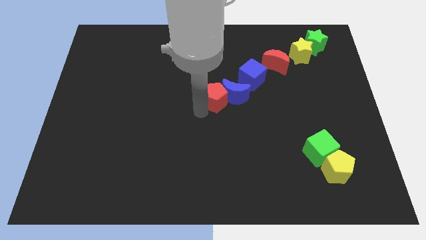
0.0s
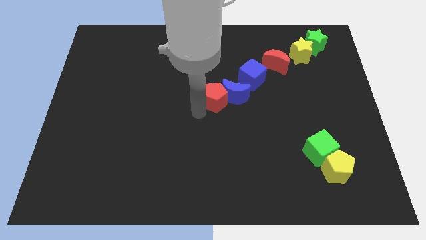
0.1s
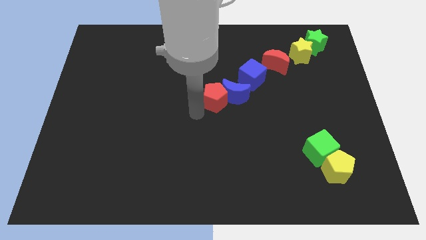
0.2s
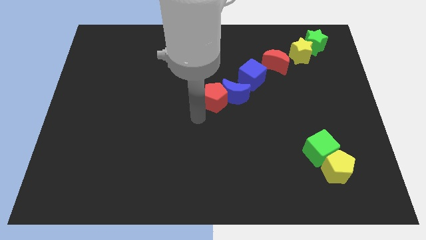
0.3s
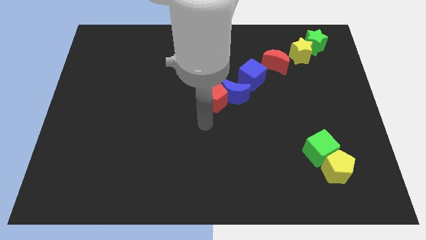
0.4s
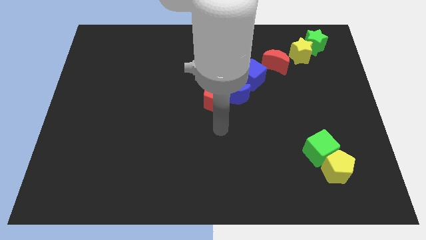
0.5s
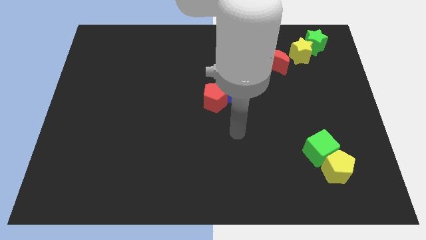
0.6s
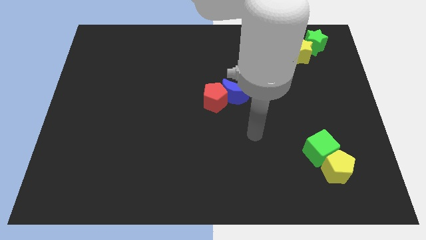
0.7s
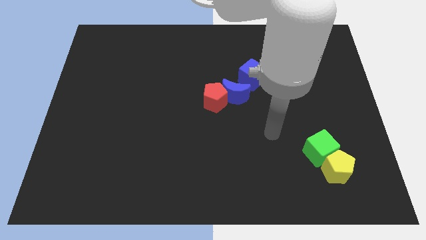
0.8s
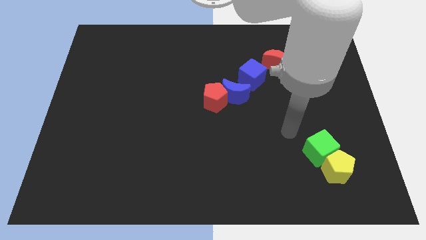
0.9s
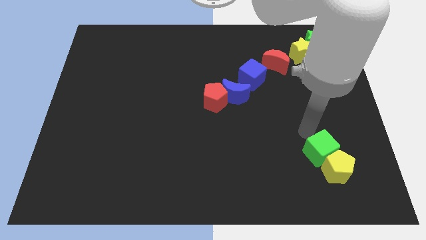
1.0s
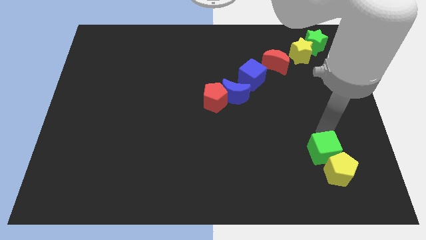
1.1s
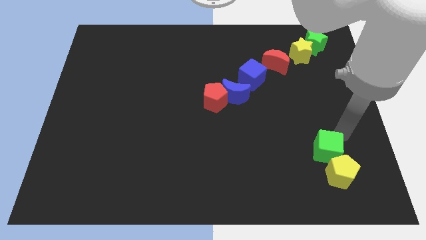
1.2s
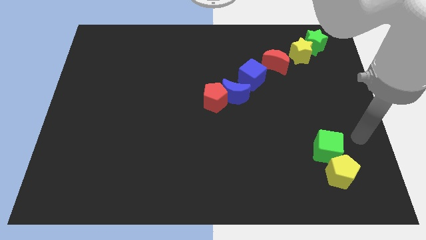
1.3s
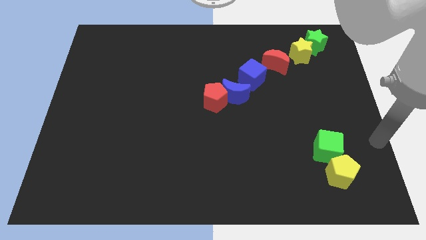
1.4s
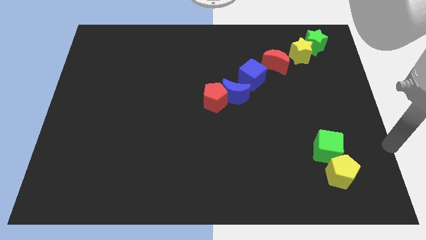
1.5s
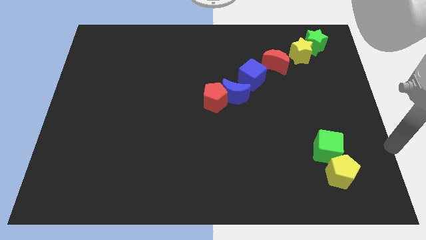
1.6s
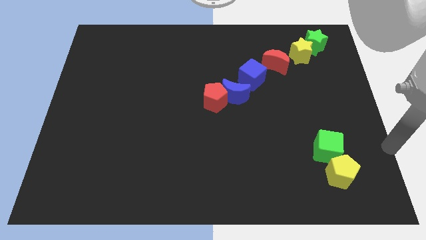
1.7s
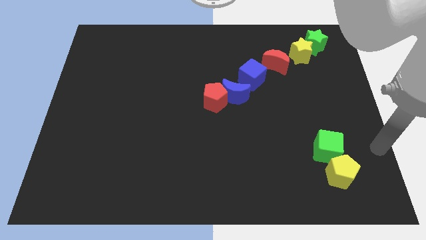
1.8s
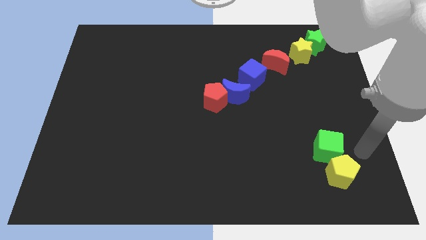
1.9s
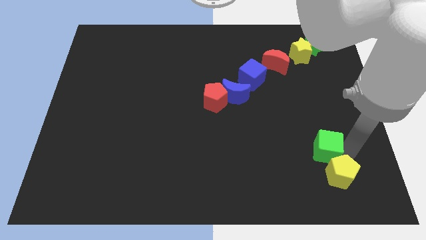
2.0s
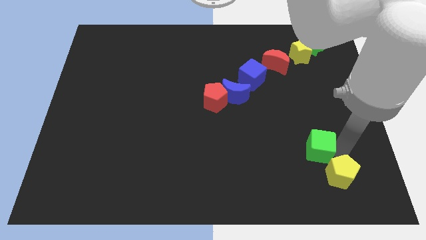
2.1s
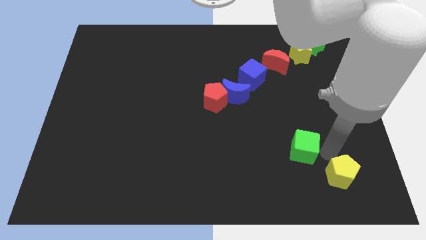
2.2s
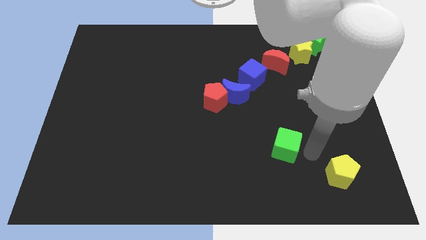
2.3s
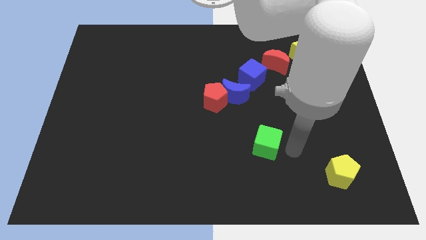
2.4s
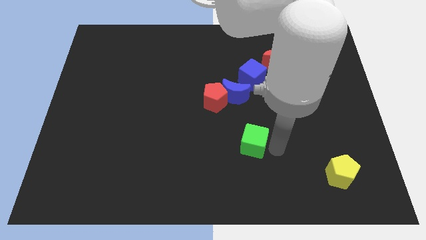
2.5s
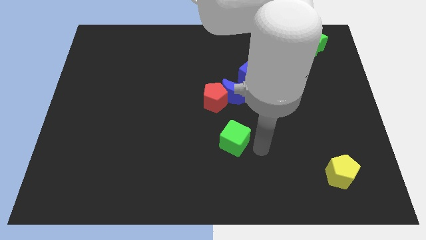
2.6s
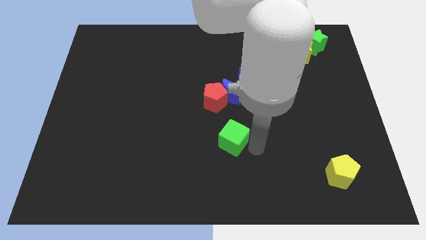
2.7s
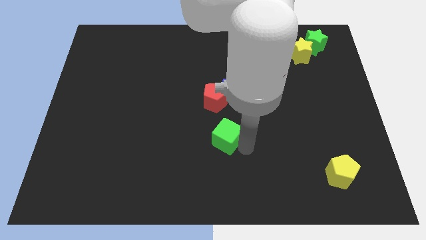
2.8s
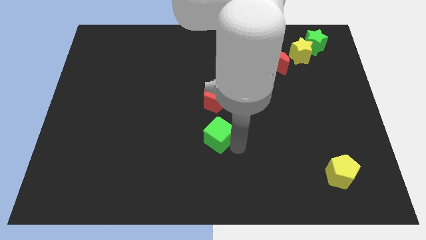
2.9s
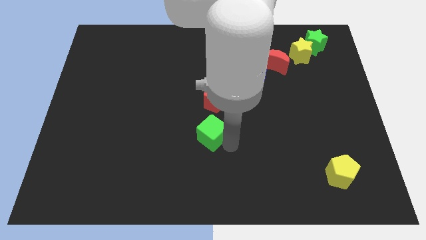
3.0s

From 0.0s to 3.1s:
push green cube below the red pentagon

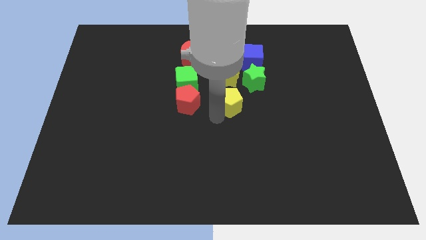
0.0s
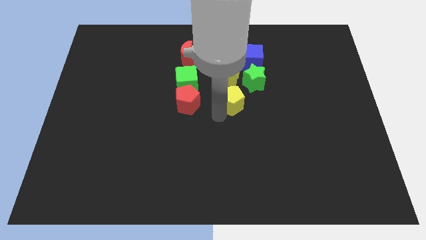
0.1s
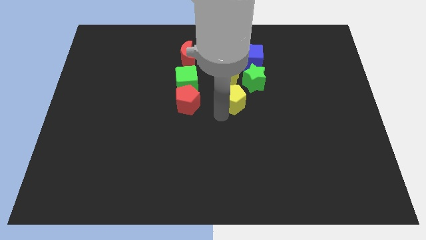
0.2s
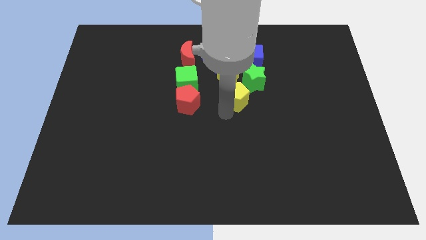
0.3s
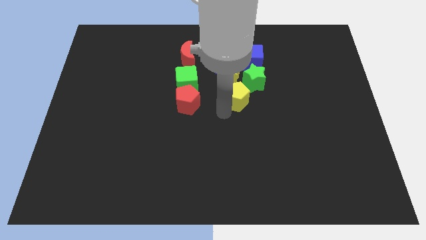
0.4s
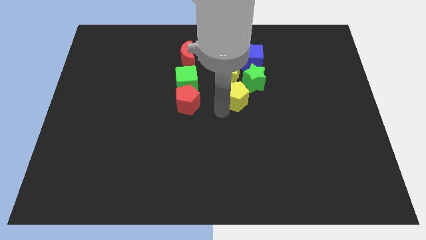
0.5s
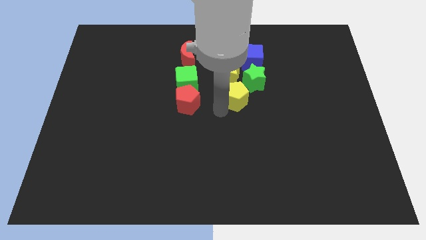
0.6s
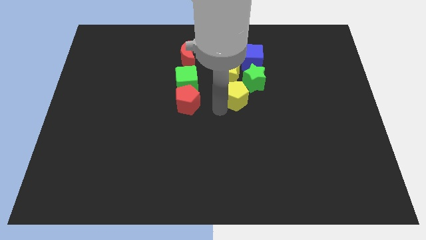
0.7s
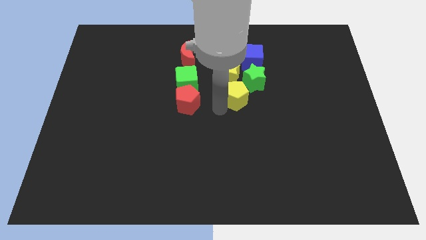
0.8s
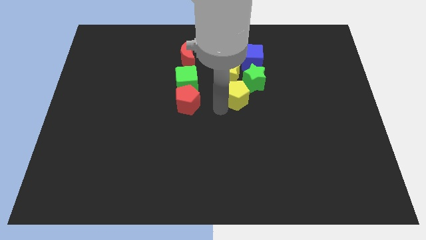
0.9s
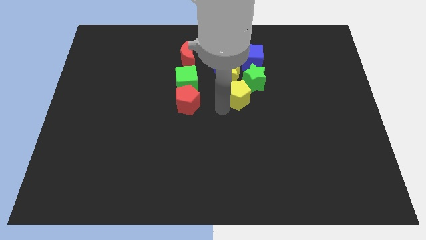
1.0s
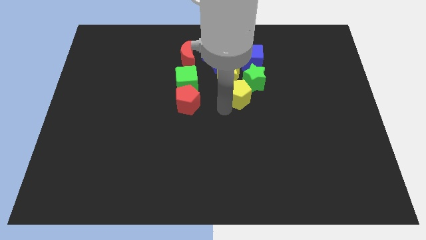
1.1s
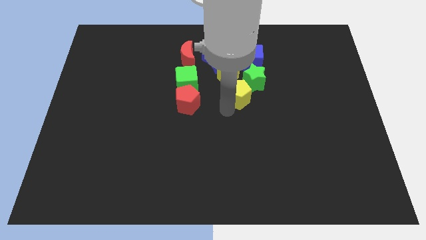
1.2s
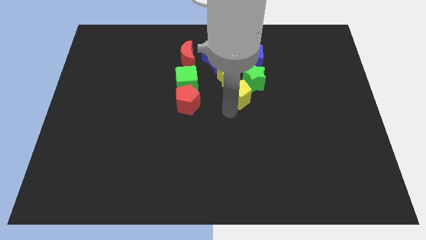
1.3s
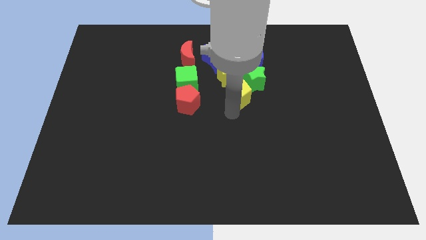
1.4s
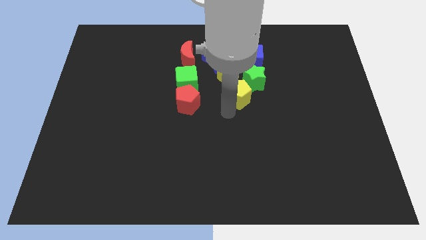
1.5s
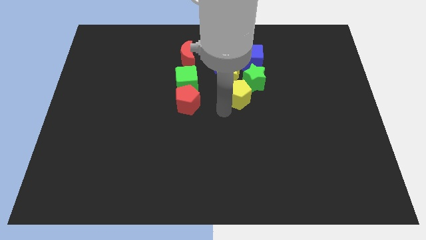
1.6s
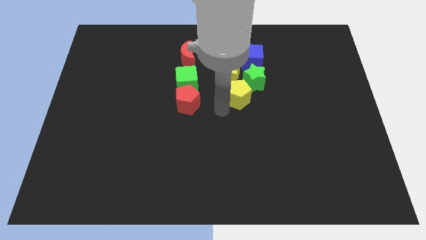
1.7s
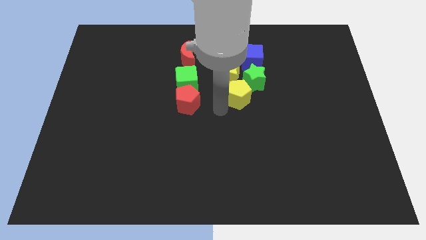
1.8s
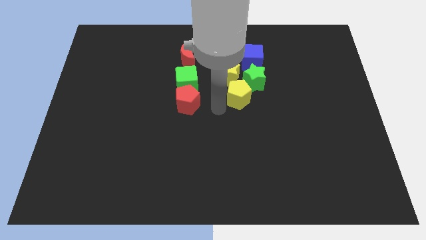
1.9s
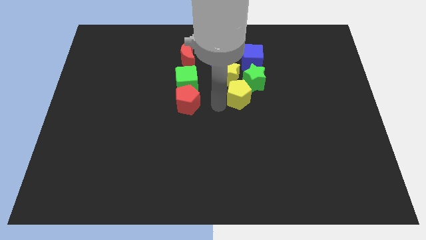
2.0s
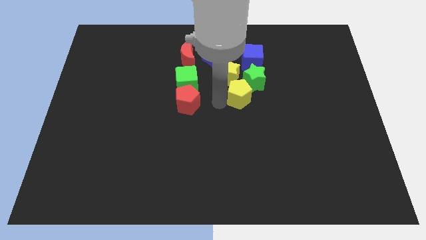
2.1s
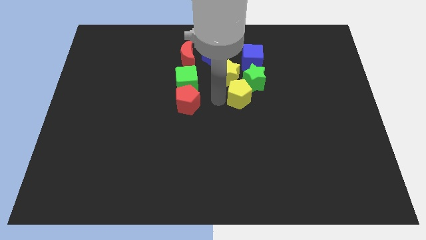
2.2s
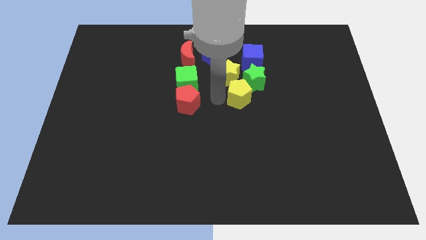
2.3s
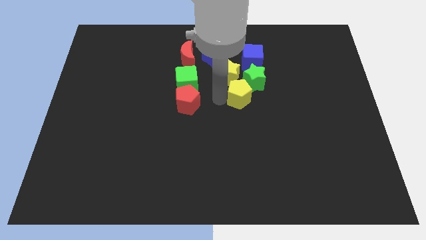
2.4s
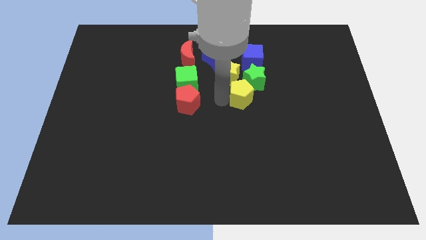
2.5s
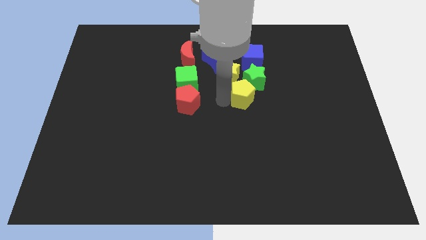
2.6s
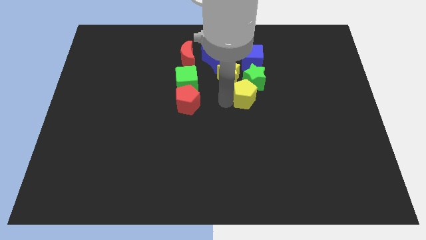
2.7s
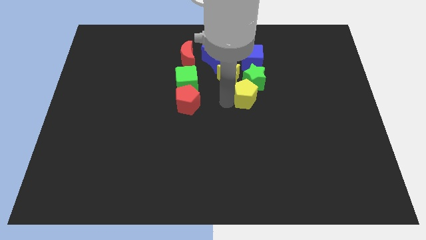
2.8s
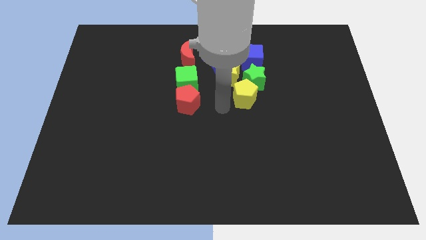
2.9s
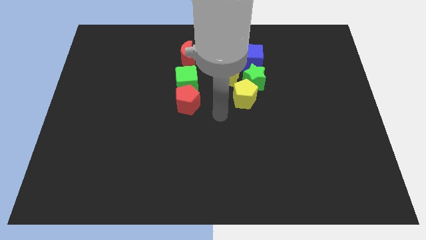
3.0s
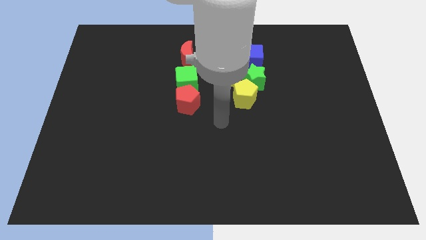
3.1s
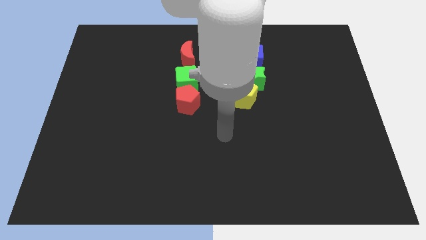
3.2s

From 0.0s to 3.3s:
move the yellow pentagon towards the green star

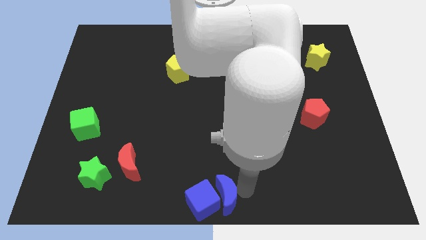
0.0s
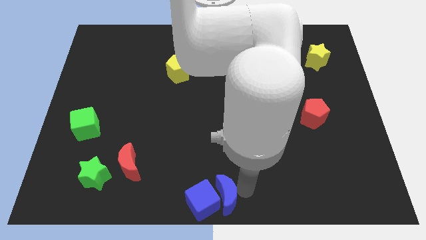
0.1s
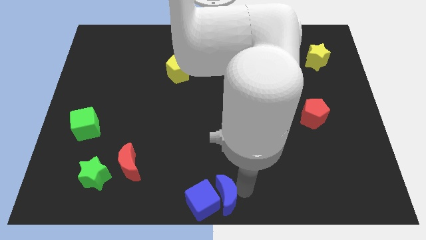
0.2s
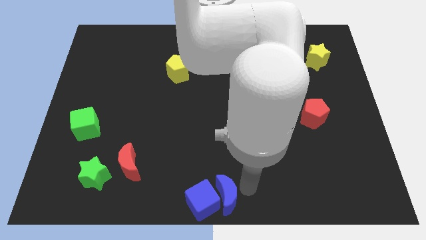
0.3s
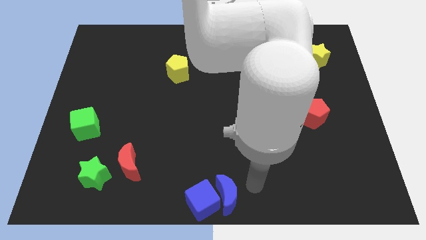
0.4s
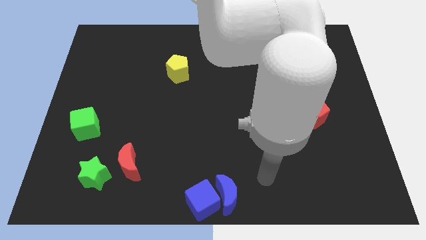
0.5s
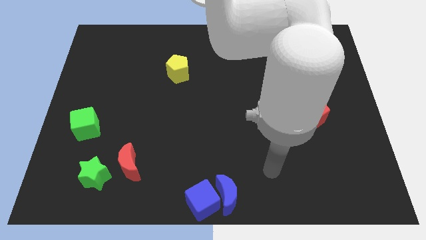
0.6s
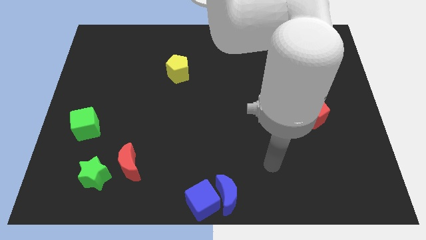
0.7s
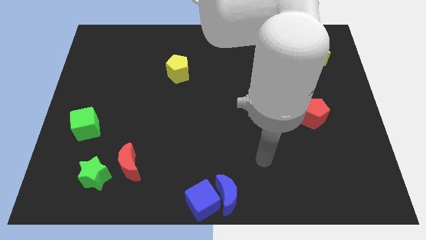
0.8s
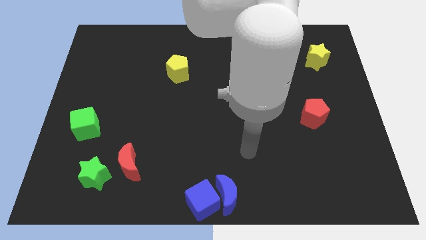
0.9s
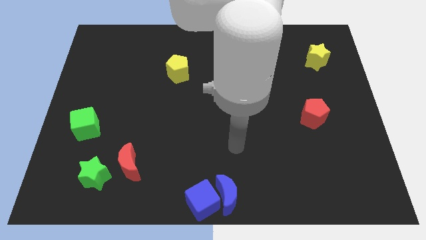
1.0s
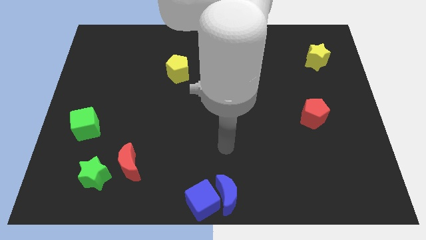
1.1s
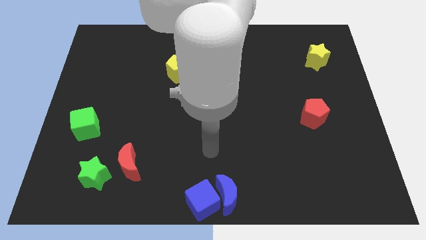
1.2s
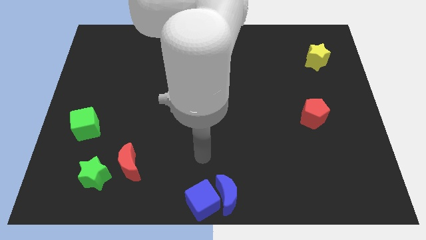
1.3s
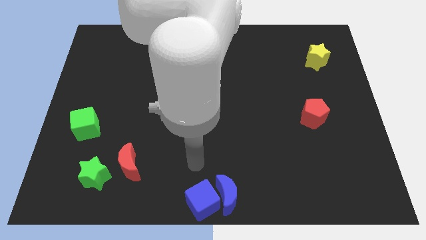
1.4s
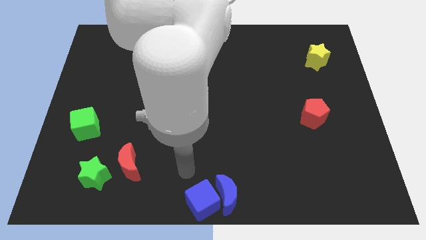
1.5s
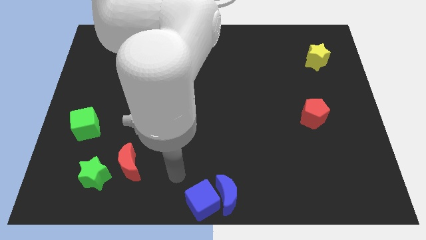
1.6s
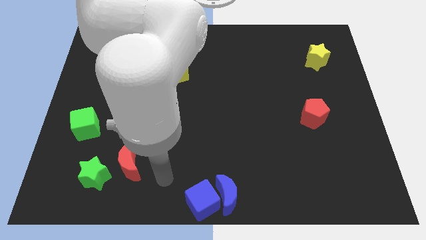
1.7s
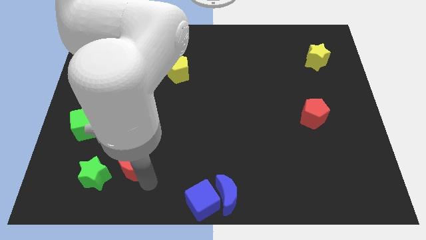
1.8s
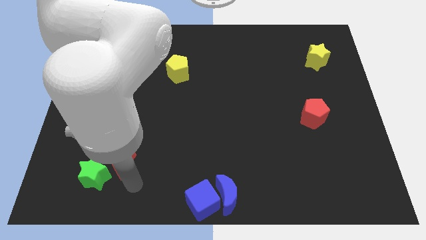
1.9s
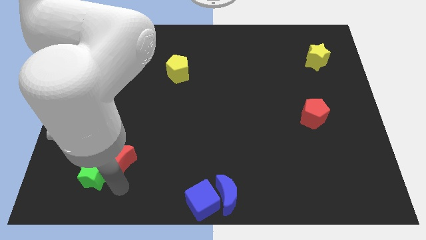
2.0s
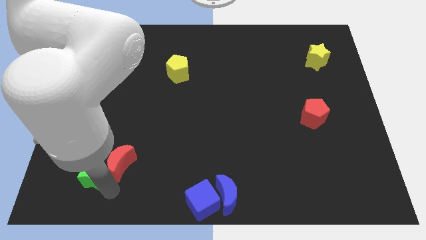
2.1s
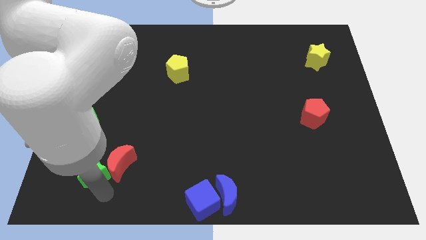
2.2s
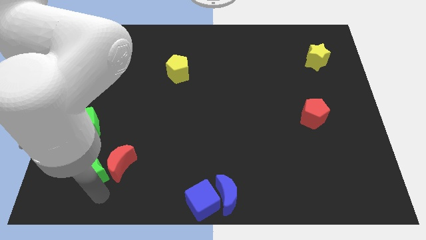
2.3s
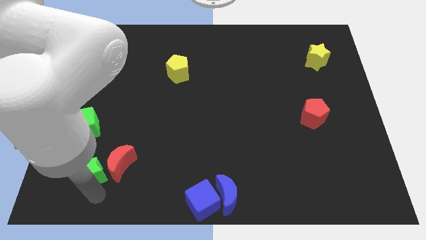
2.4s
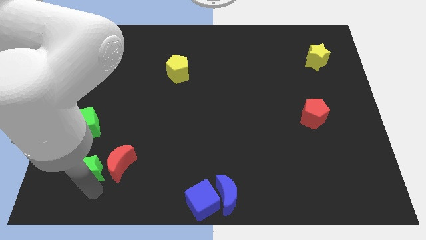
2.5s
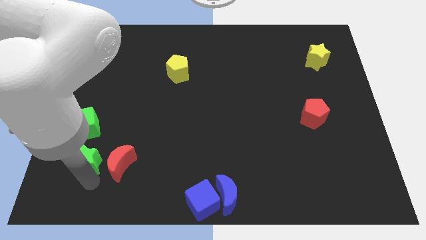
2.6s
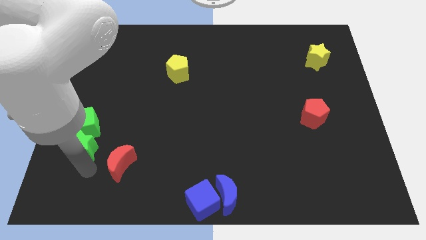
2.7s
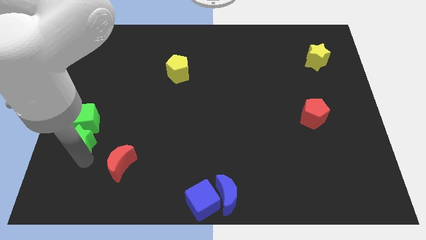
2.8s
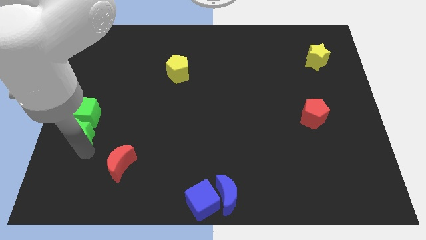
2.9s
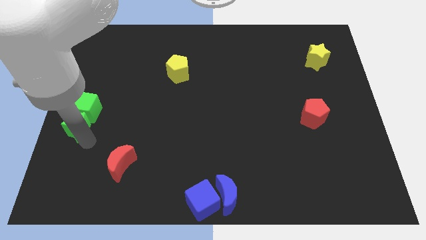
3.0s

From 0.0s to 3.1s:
separate green star from red moon
